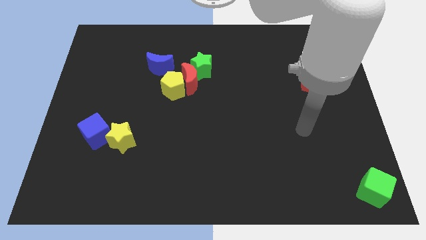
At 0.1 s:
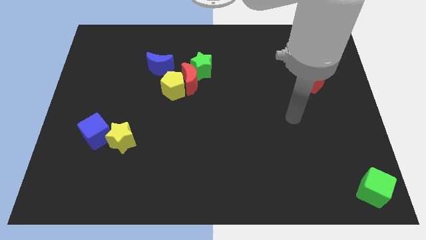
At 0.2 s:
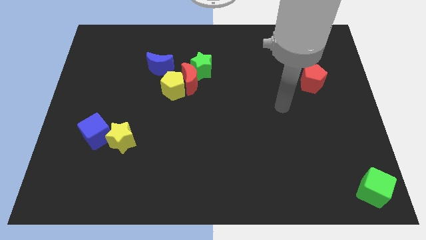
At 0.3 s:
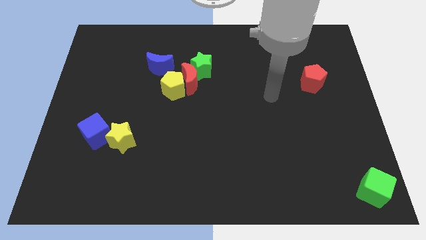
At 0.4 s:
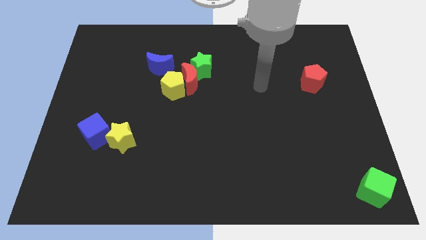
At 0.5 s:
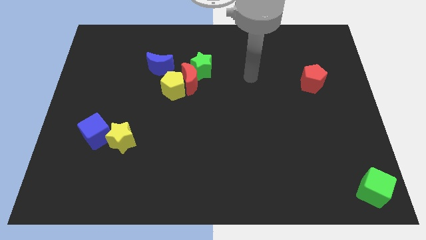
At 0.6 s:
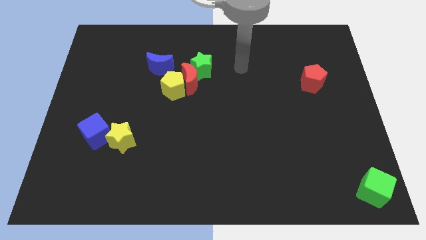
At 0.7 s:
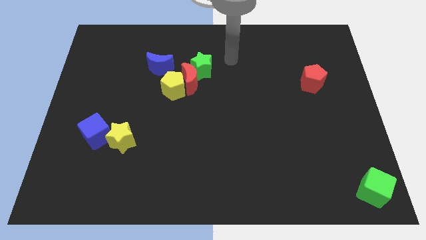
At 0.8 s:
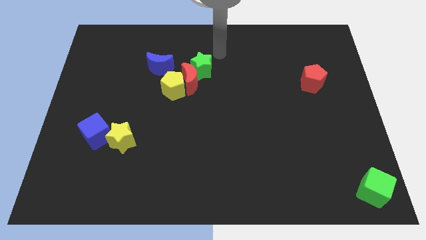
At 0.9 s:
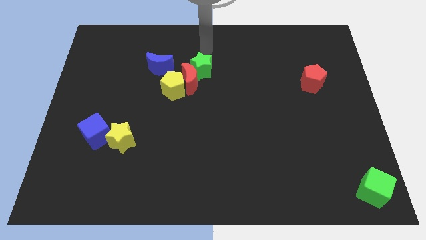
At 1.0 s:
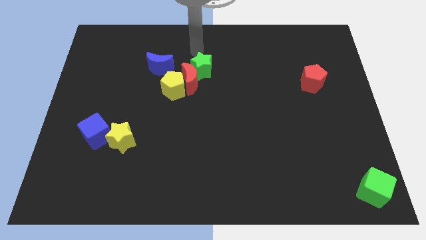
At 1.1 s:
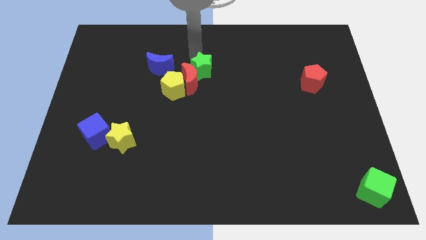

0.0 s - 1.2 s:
move your arm on top of the green star

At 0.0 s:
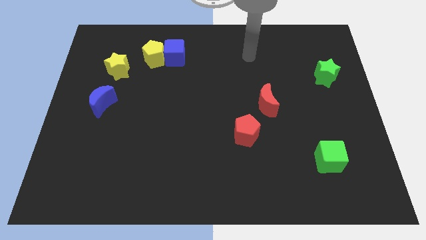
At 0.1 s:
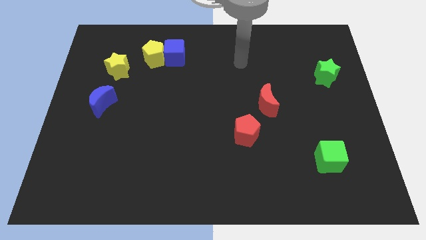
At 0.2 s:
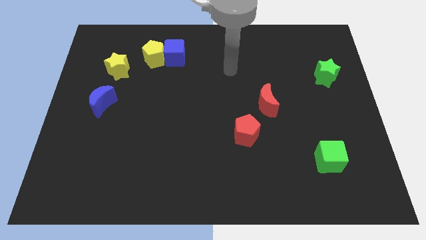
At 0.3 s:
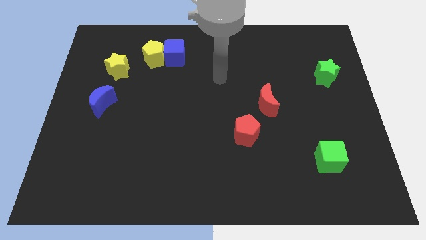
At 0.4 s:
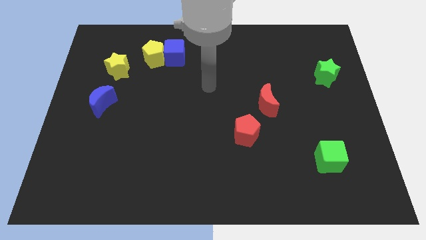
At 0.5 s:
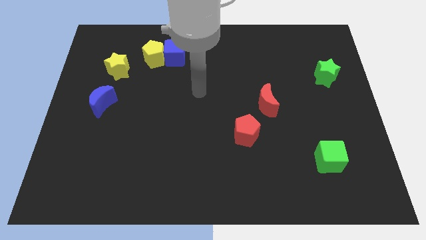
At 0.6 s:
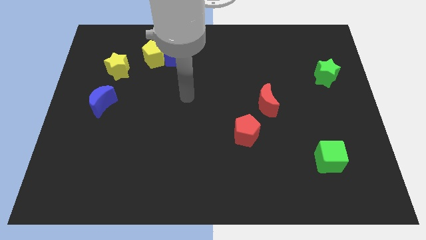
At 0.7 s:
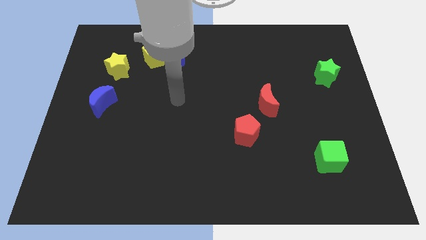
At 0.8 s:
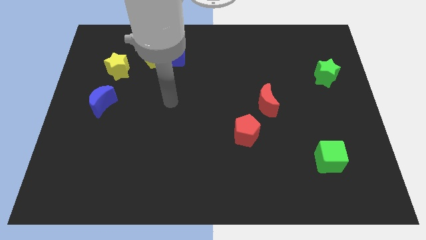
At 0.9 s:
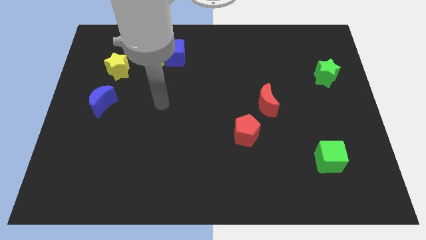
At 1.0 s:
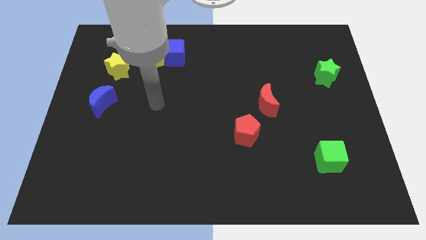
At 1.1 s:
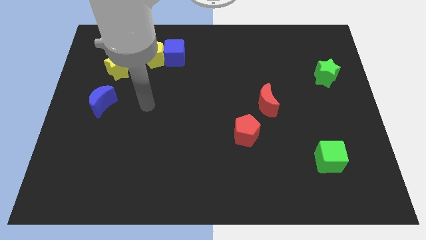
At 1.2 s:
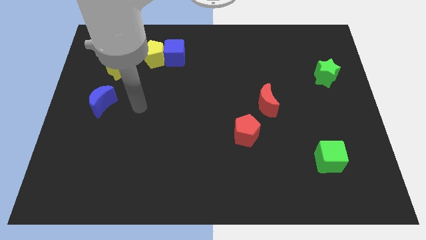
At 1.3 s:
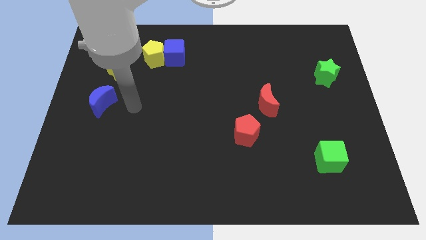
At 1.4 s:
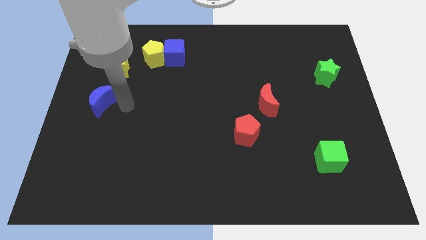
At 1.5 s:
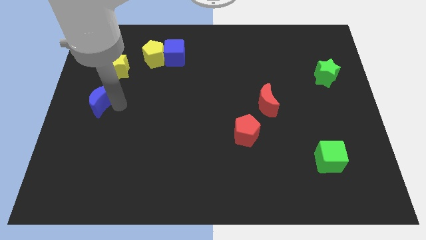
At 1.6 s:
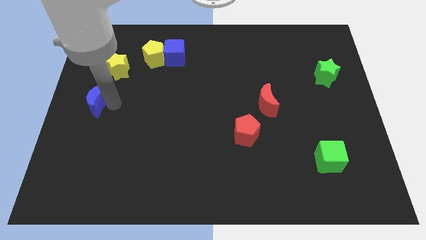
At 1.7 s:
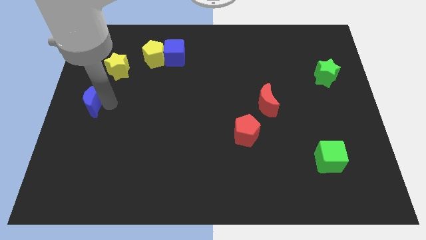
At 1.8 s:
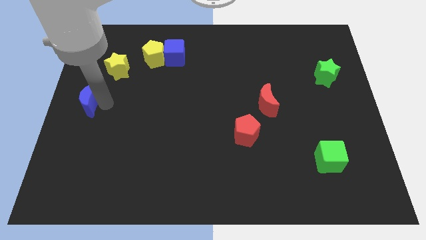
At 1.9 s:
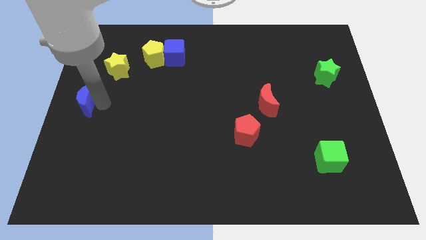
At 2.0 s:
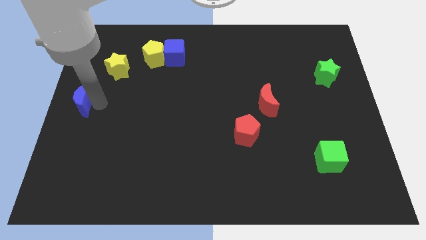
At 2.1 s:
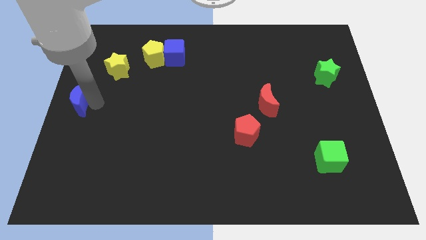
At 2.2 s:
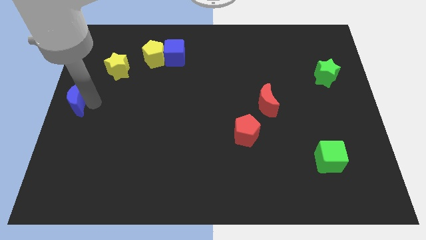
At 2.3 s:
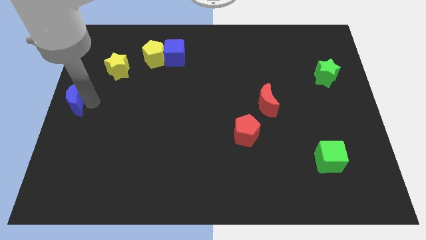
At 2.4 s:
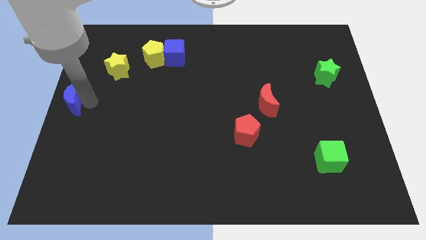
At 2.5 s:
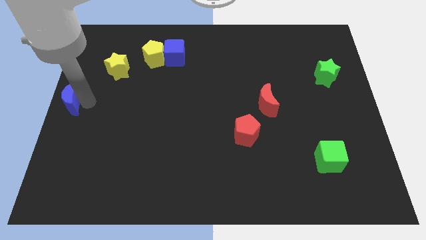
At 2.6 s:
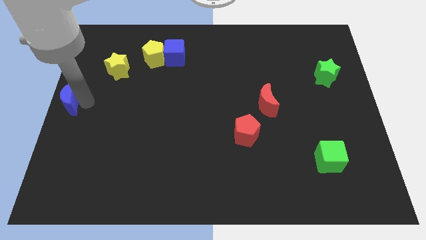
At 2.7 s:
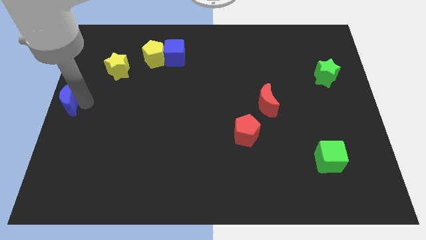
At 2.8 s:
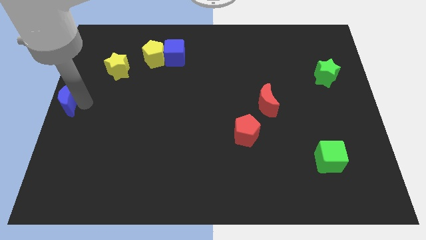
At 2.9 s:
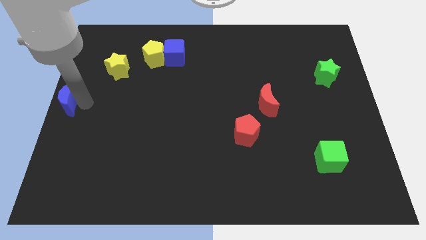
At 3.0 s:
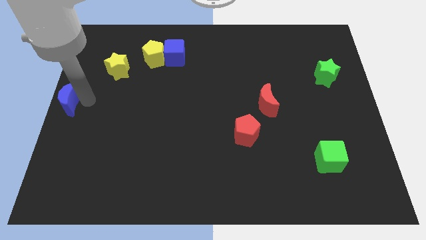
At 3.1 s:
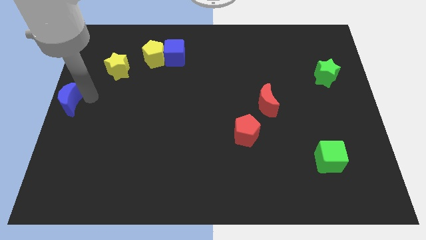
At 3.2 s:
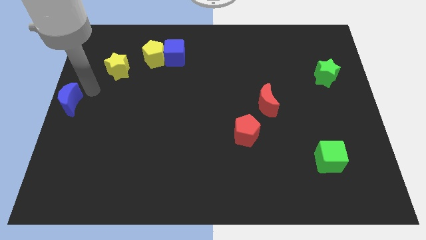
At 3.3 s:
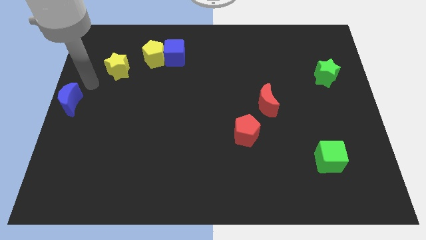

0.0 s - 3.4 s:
push the blue crescent to the left side center of the board

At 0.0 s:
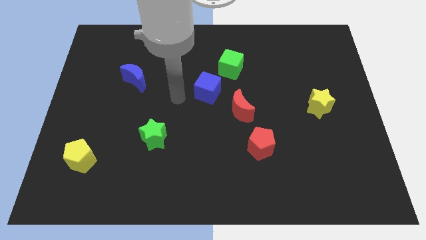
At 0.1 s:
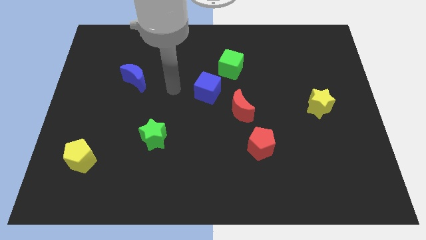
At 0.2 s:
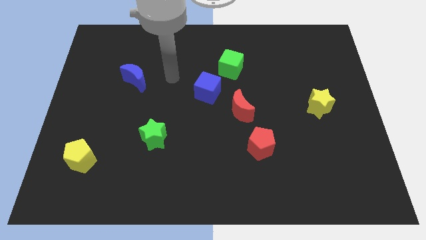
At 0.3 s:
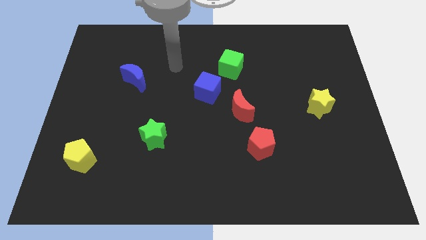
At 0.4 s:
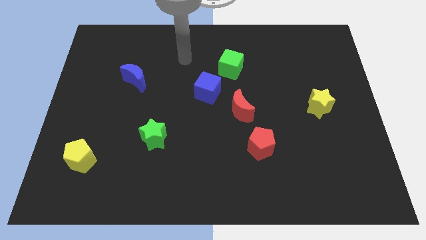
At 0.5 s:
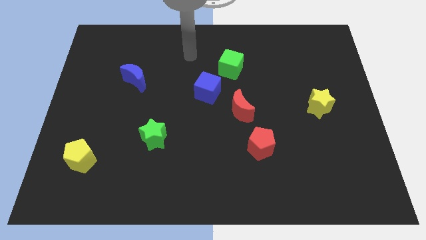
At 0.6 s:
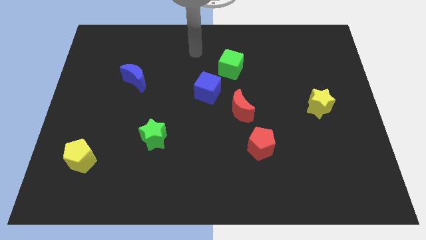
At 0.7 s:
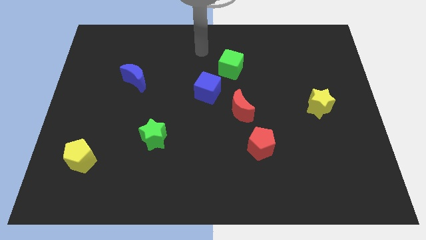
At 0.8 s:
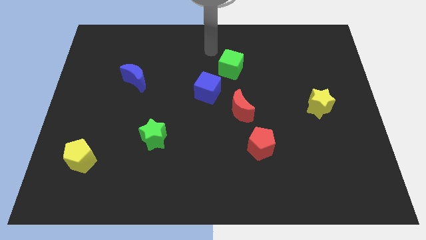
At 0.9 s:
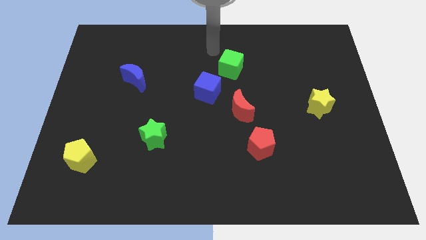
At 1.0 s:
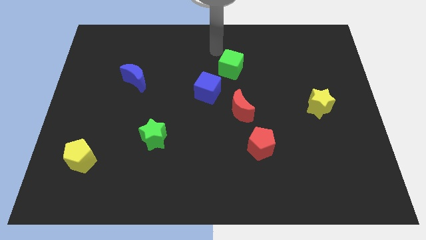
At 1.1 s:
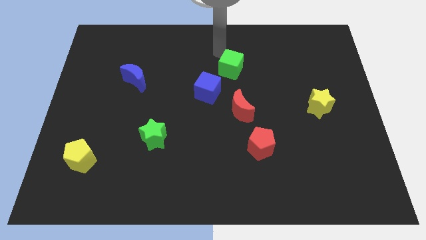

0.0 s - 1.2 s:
move your arm to the top of the green cube

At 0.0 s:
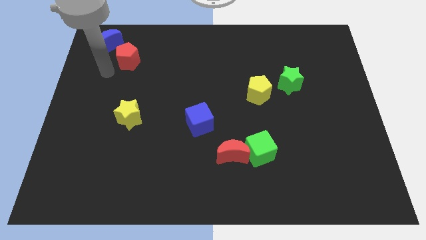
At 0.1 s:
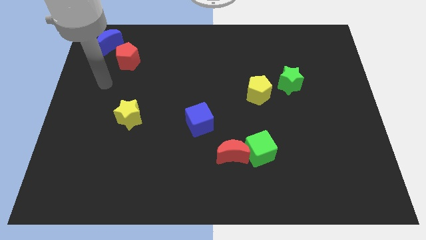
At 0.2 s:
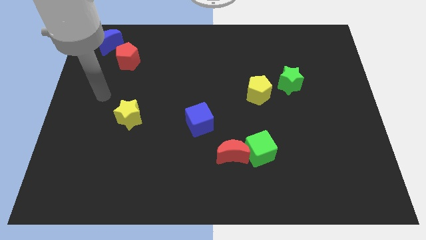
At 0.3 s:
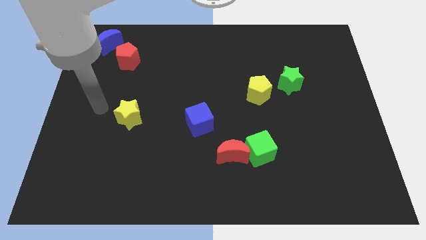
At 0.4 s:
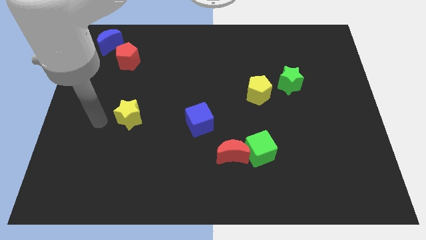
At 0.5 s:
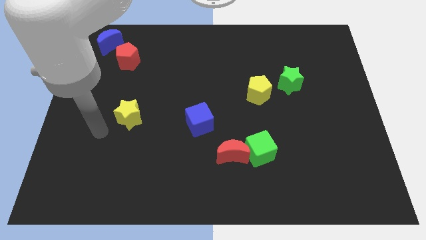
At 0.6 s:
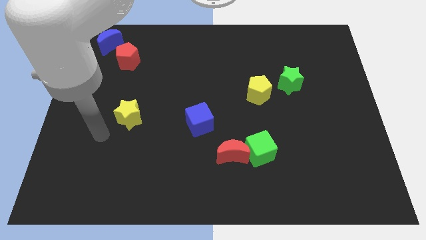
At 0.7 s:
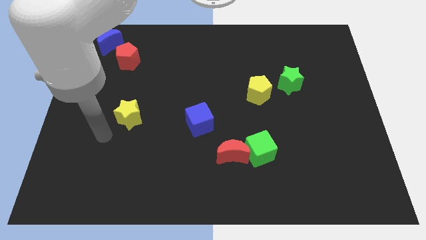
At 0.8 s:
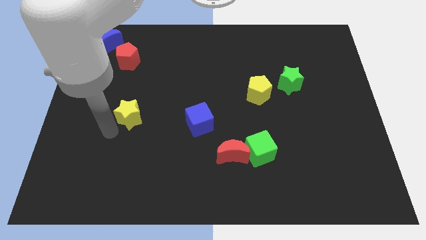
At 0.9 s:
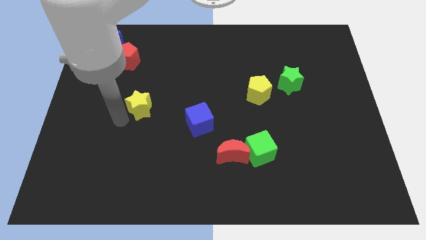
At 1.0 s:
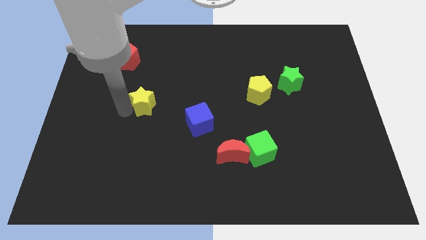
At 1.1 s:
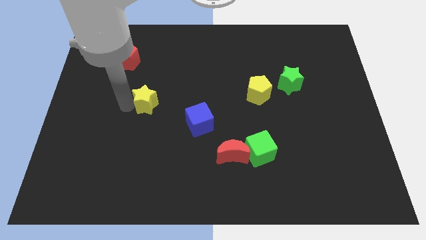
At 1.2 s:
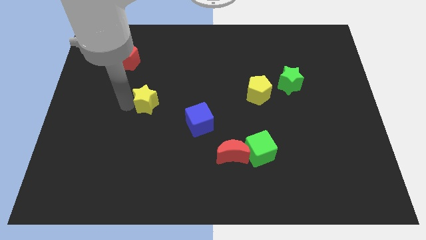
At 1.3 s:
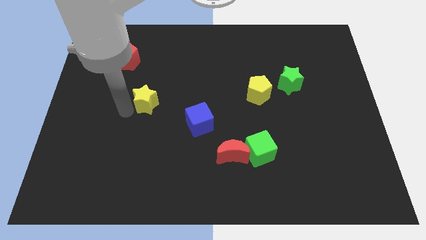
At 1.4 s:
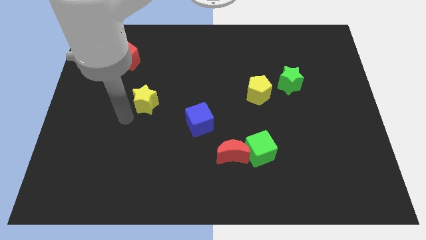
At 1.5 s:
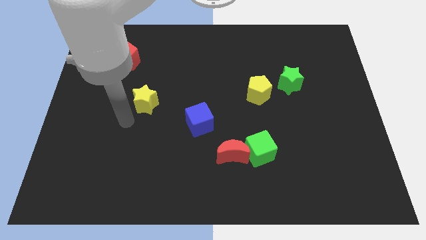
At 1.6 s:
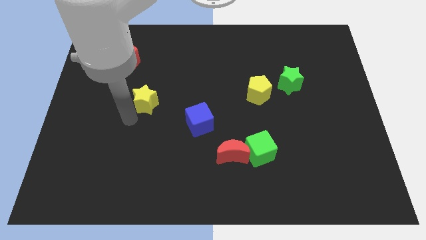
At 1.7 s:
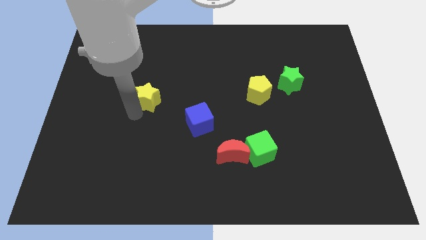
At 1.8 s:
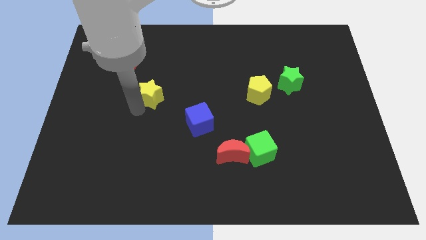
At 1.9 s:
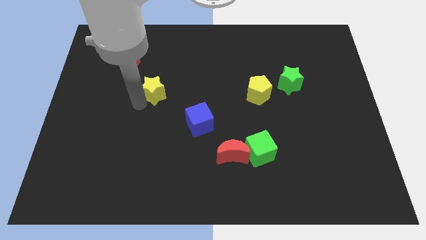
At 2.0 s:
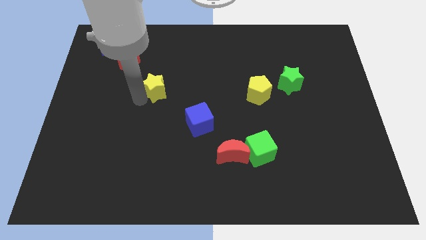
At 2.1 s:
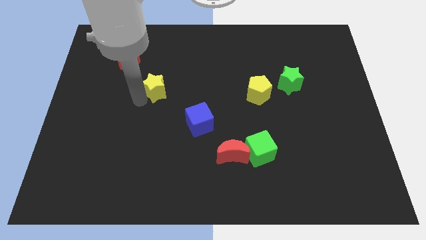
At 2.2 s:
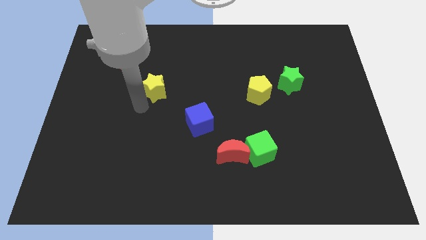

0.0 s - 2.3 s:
move the yellow star towards top center of the board

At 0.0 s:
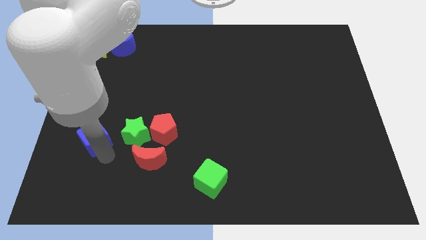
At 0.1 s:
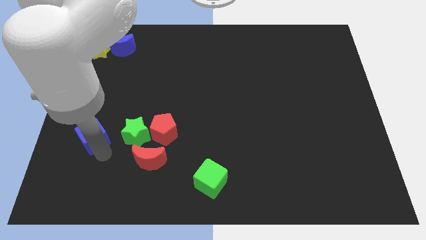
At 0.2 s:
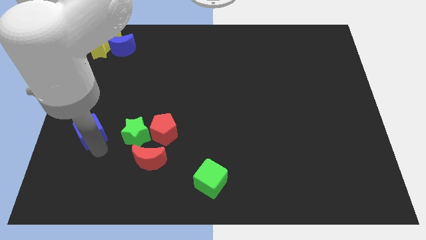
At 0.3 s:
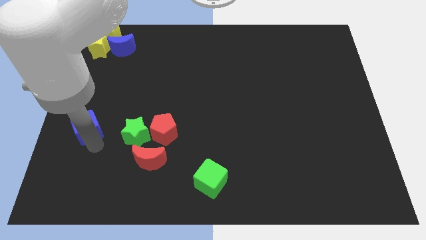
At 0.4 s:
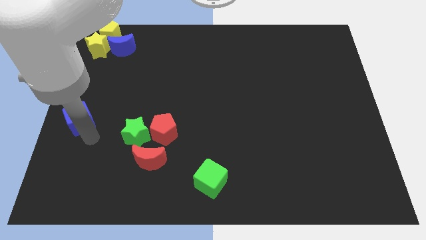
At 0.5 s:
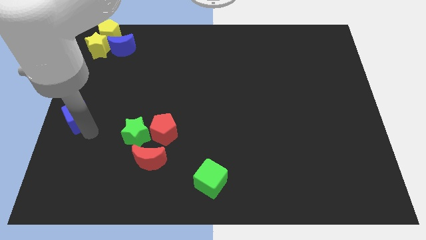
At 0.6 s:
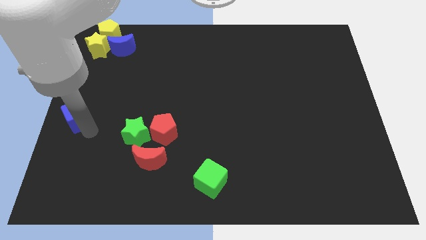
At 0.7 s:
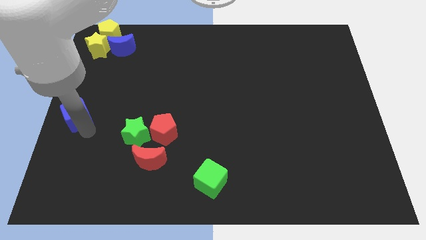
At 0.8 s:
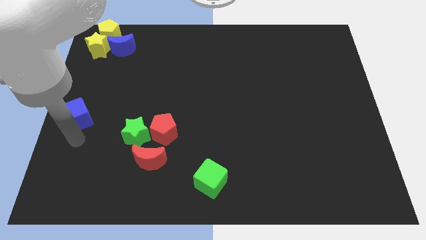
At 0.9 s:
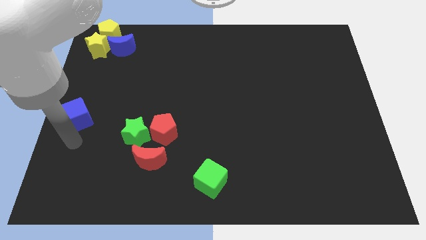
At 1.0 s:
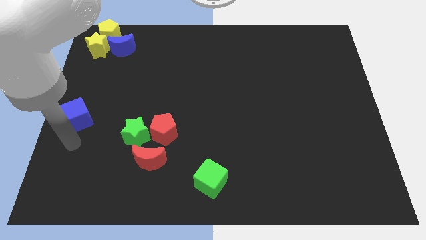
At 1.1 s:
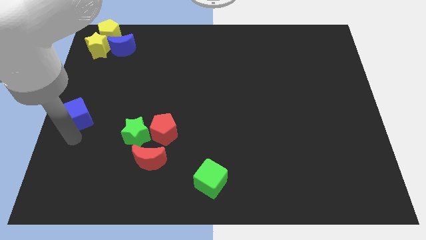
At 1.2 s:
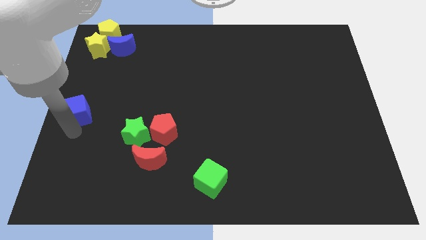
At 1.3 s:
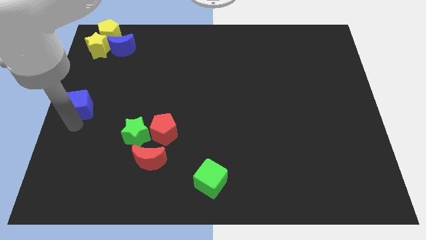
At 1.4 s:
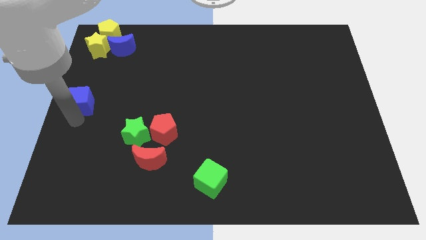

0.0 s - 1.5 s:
move the blue cube to the center left
